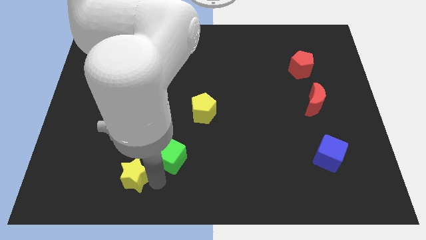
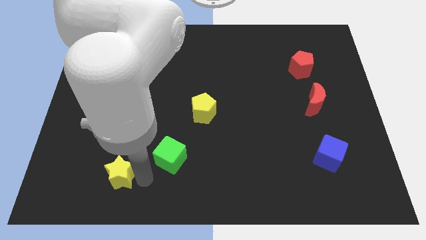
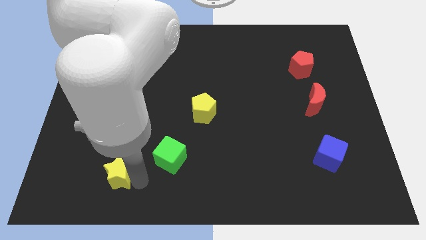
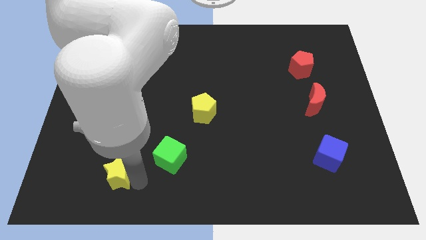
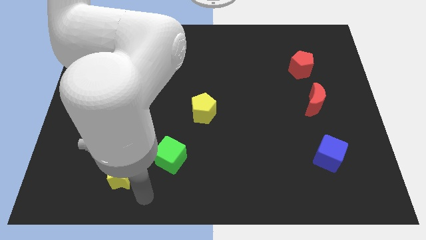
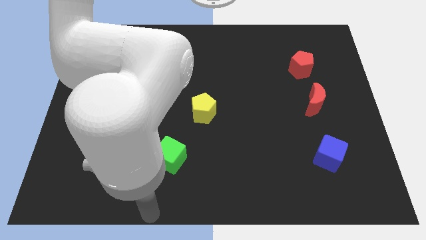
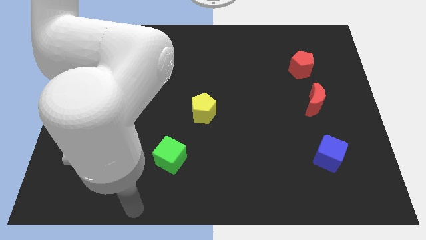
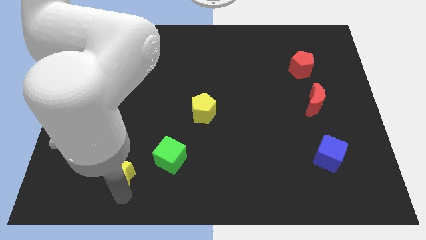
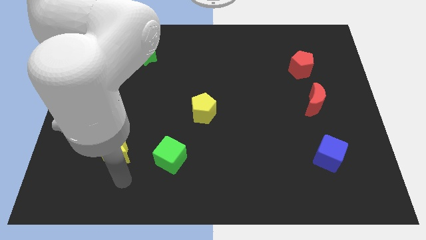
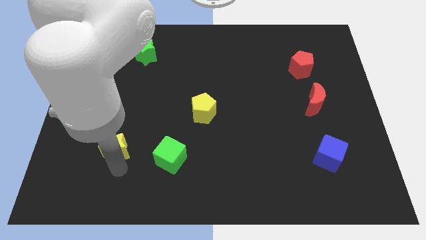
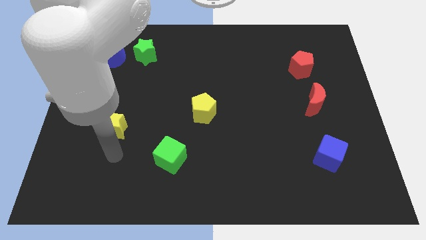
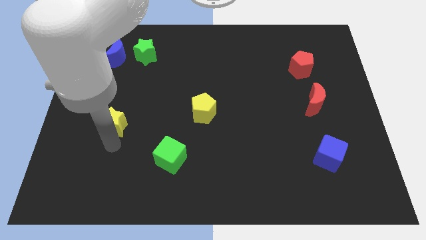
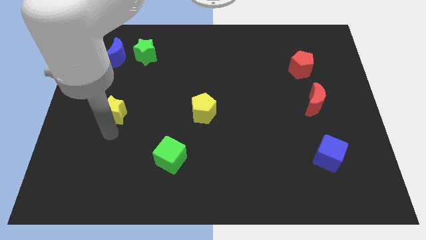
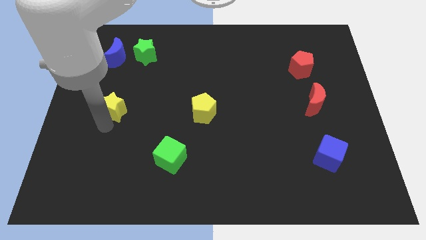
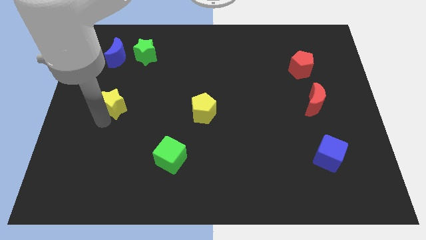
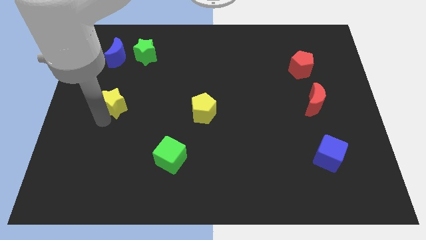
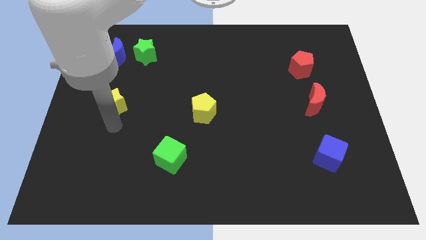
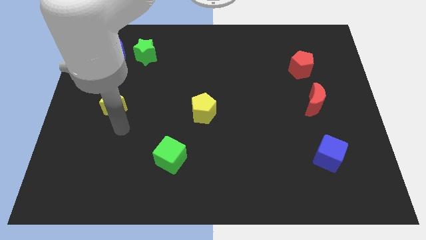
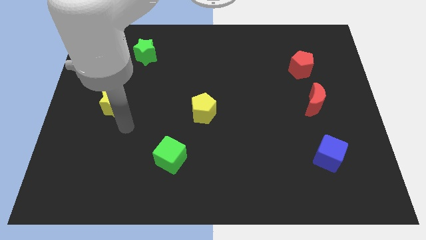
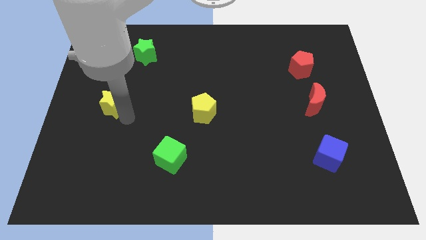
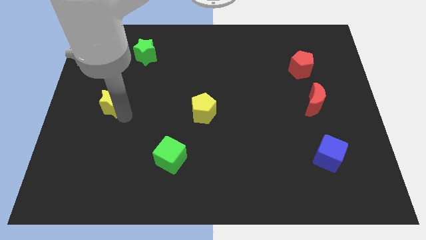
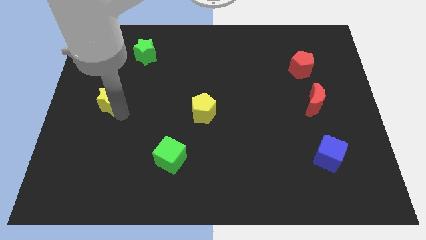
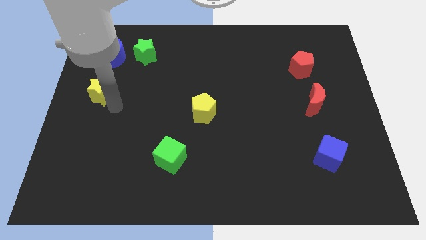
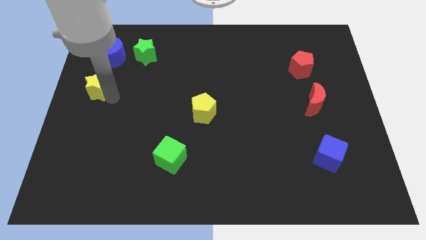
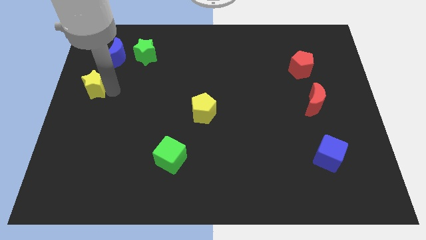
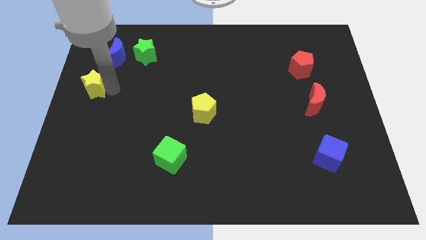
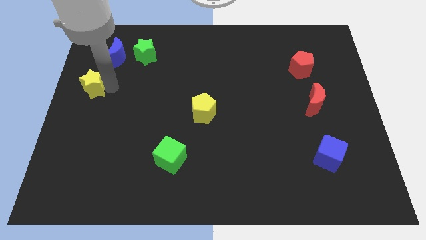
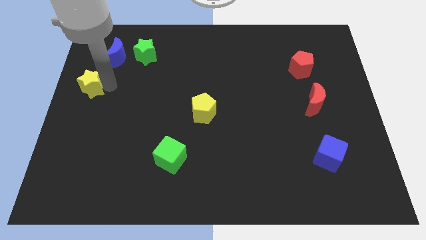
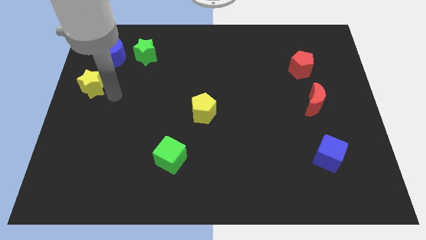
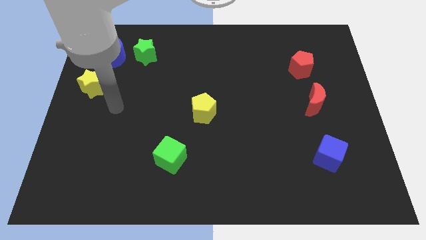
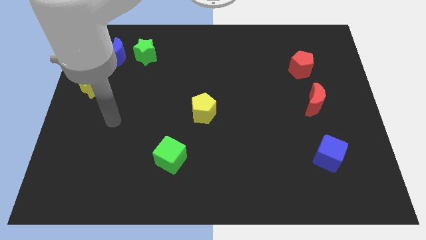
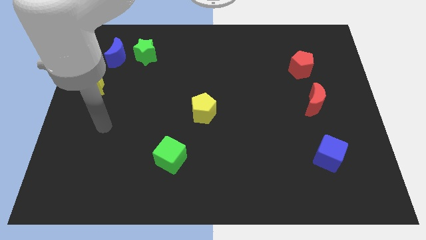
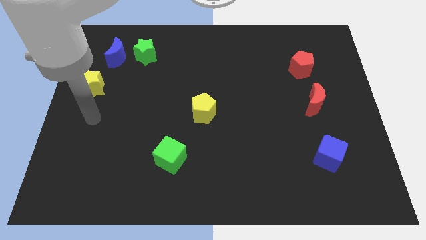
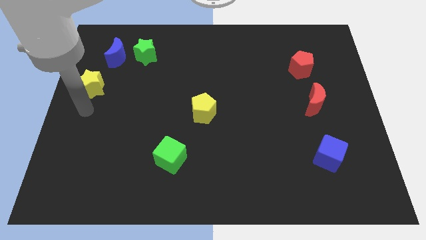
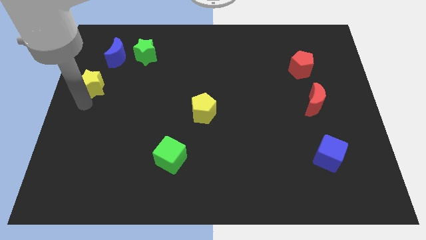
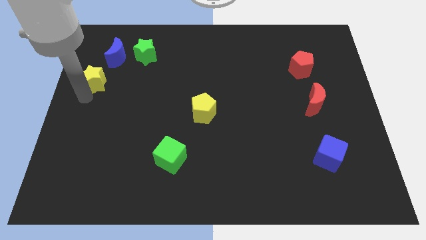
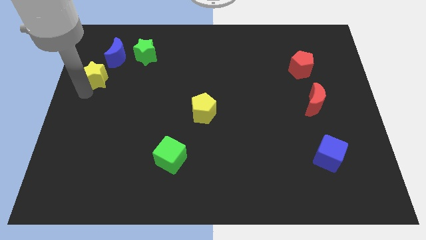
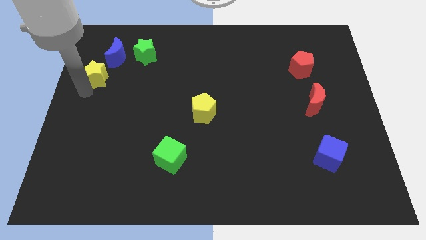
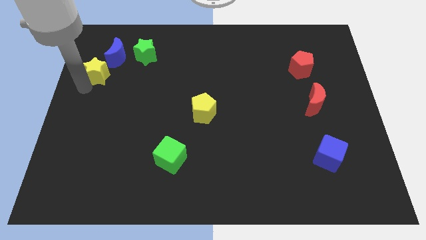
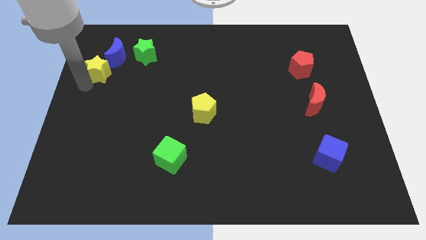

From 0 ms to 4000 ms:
move the yellow star to the bottom of the blue crescent

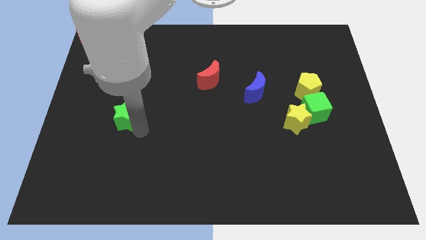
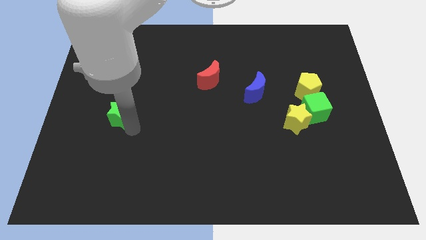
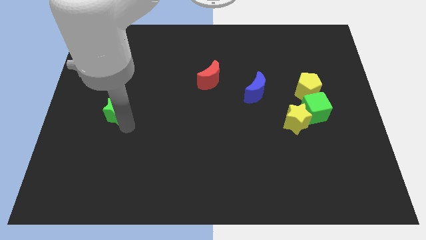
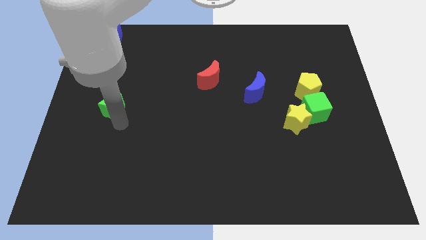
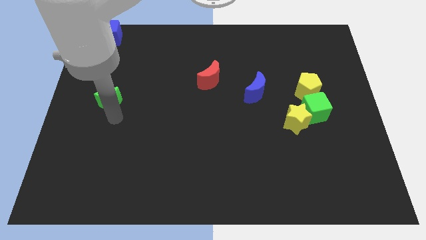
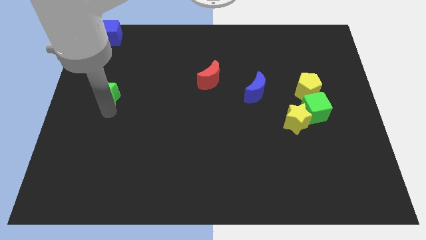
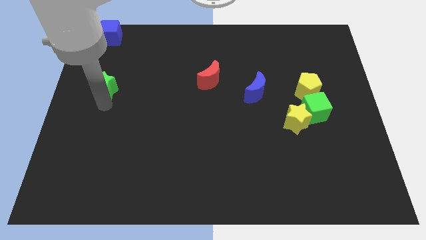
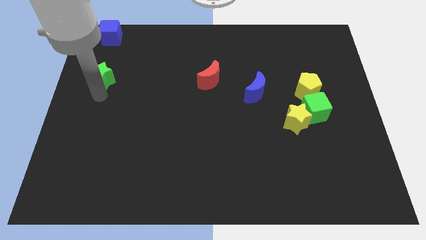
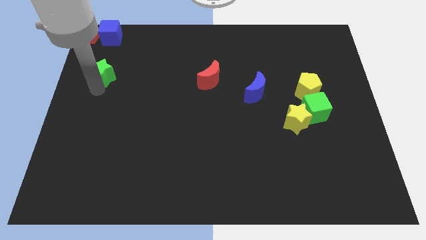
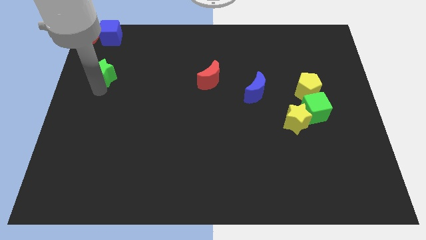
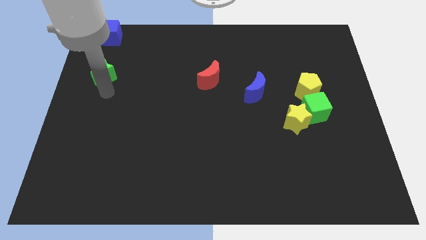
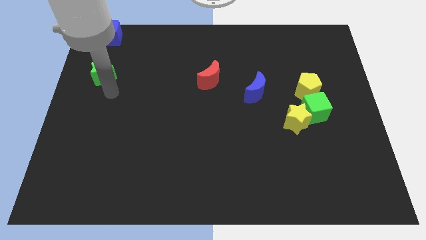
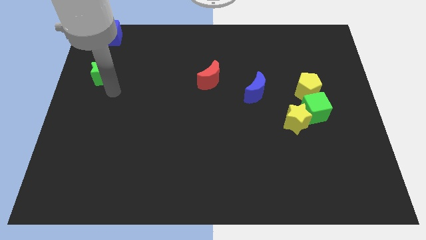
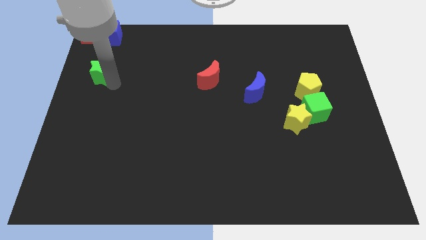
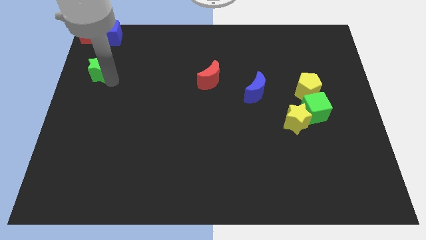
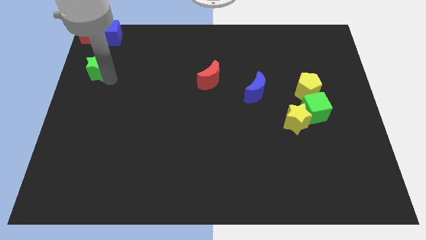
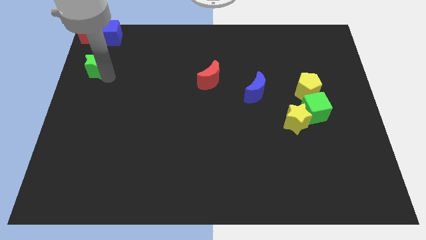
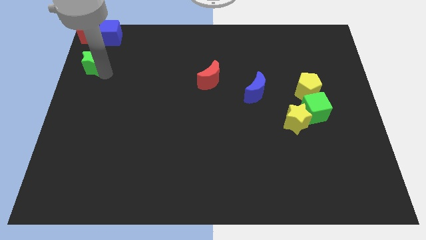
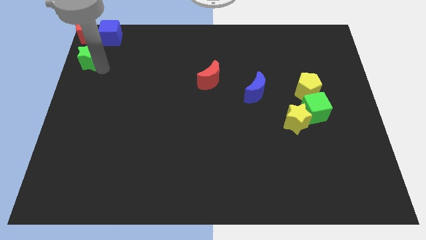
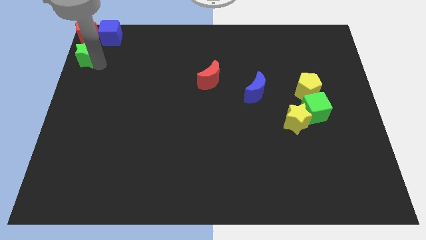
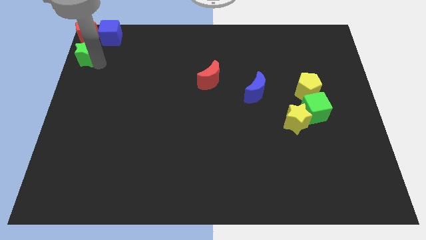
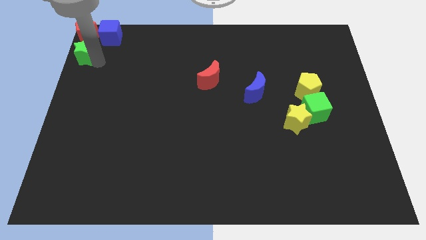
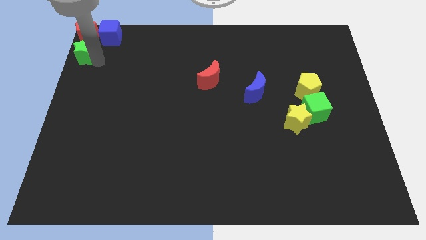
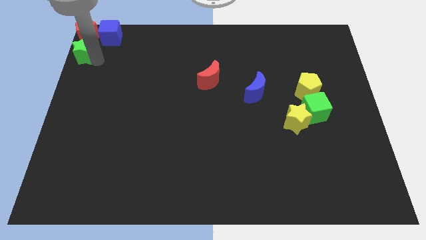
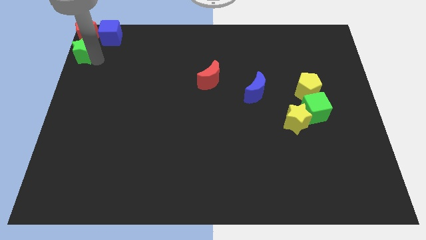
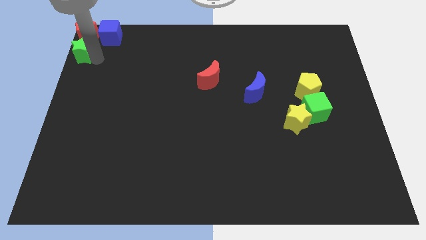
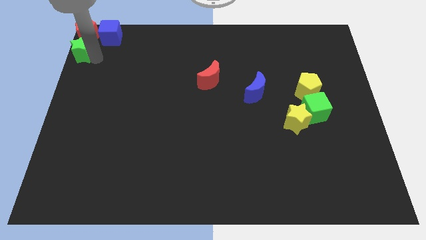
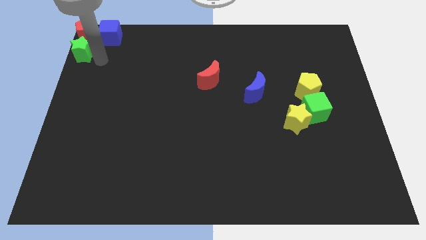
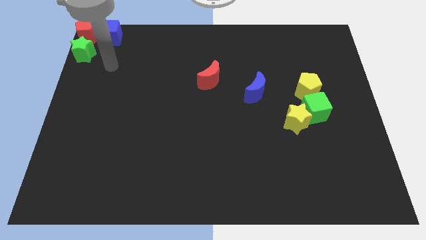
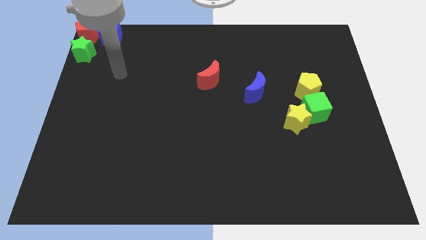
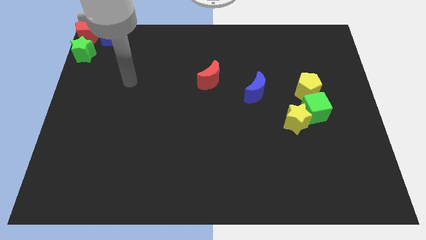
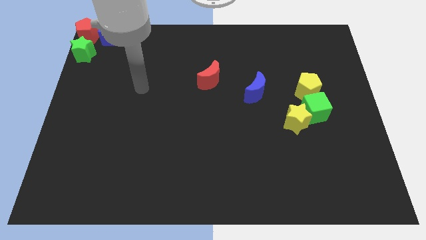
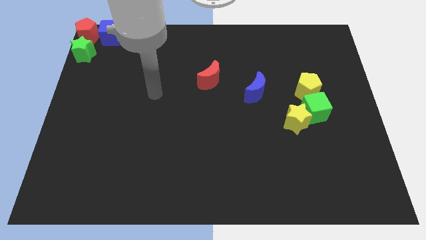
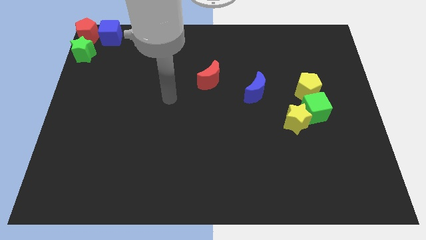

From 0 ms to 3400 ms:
push green star below red pentagon

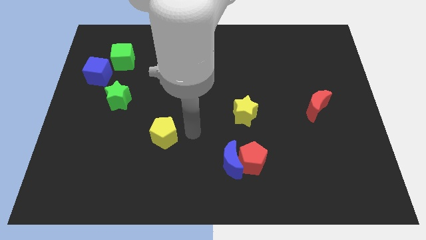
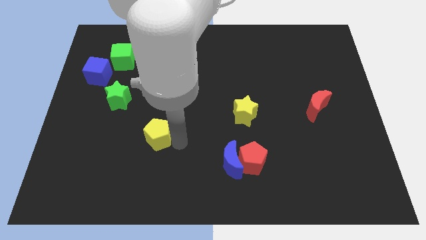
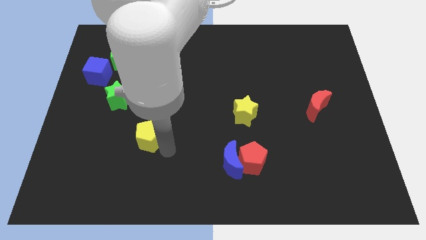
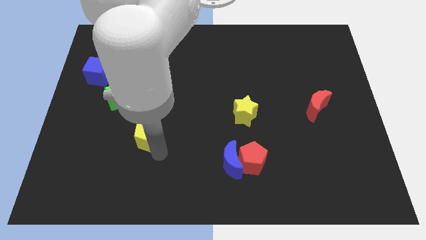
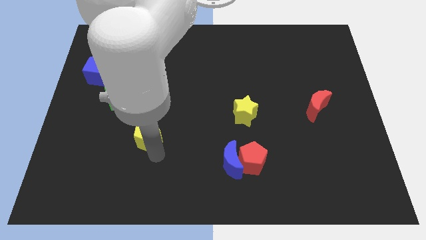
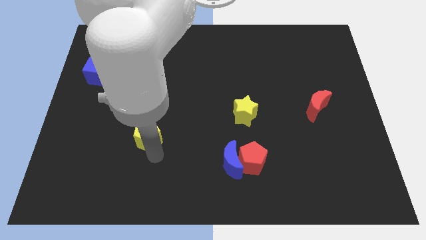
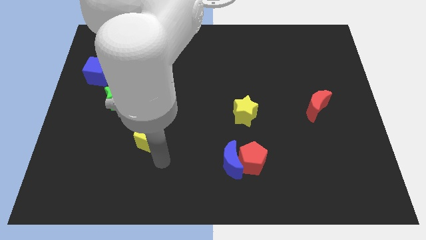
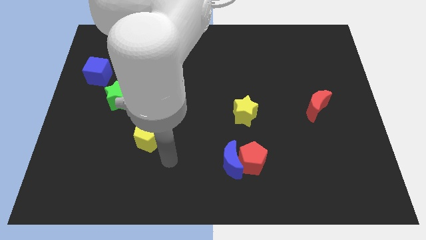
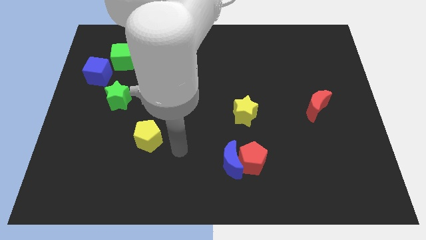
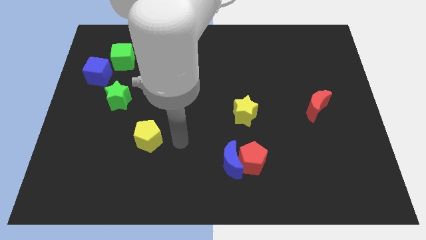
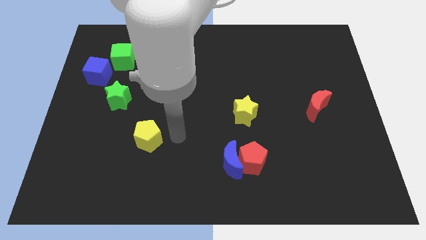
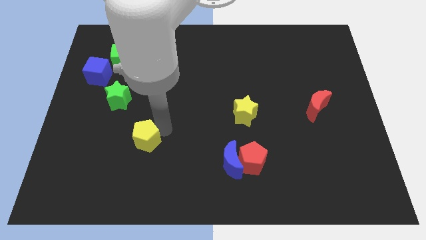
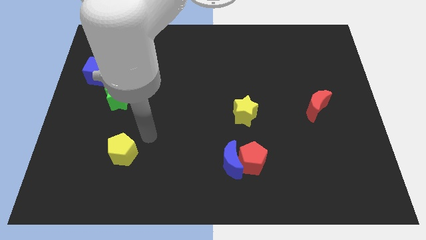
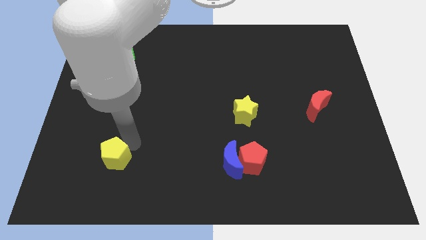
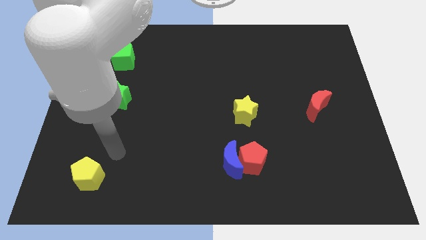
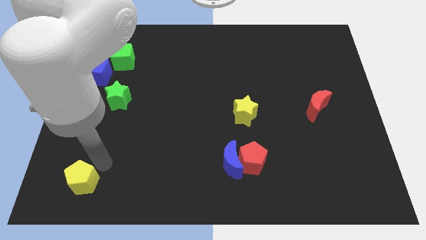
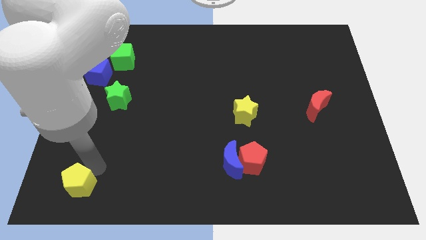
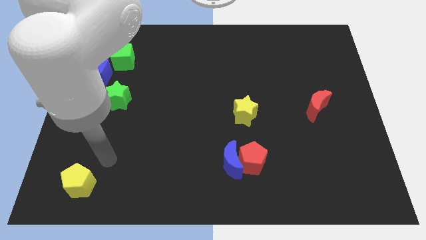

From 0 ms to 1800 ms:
push the yellow pentagon towards the bottom left corner of the board
